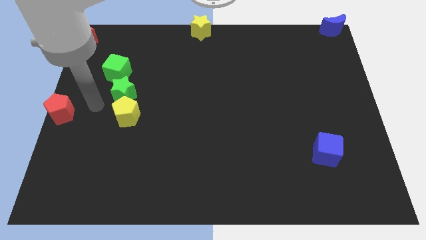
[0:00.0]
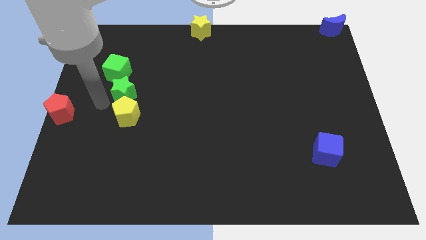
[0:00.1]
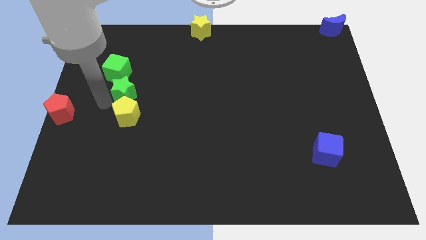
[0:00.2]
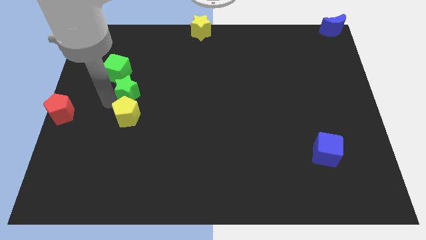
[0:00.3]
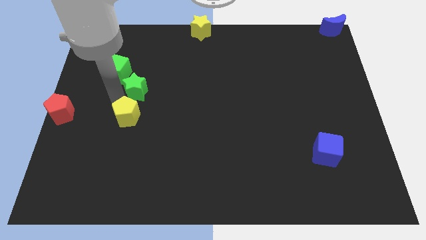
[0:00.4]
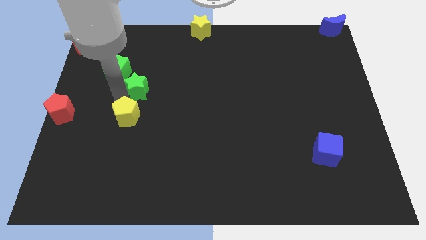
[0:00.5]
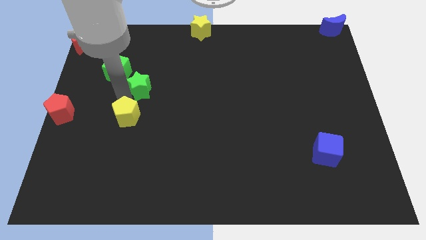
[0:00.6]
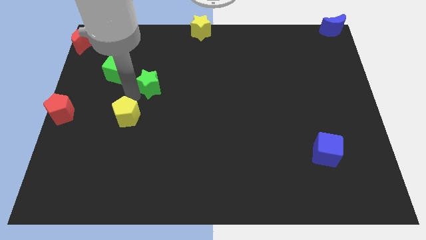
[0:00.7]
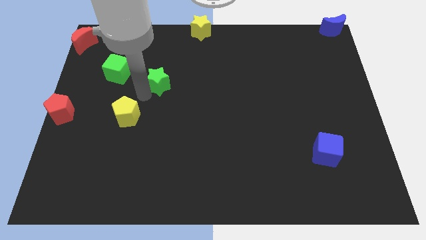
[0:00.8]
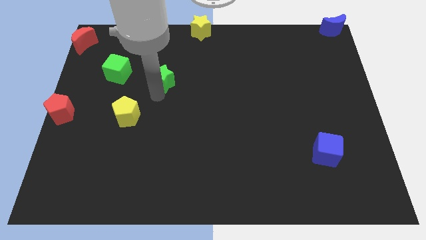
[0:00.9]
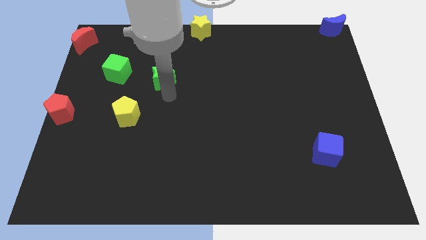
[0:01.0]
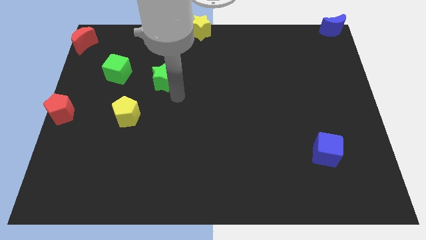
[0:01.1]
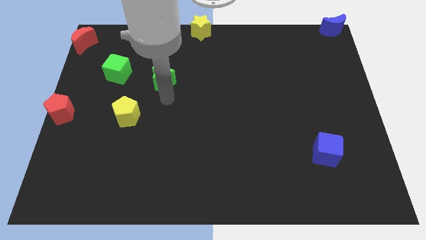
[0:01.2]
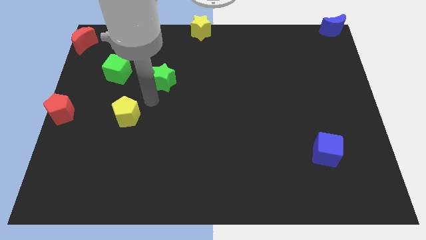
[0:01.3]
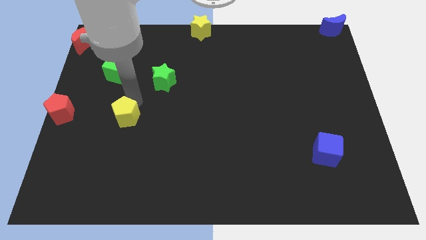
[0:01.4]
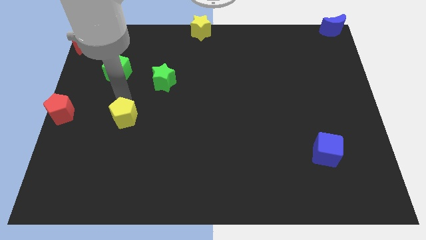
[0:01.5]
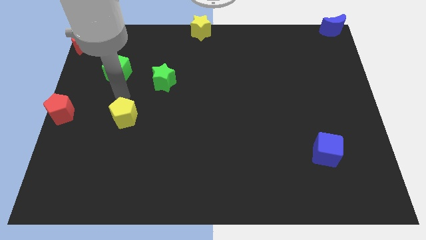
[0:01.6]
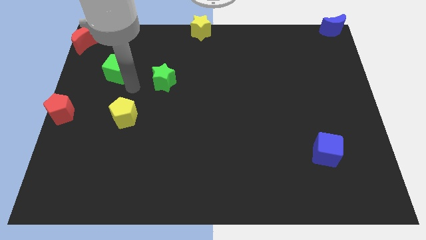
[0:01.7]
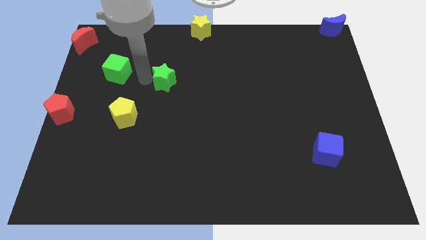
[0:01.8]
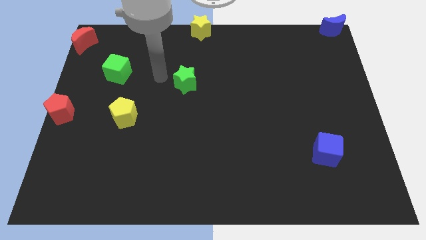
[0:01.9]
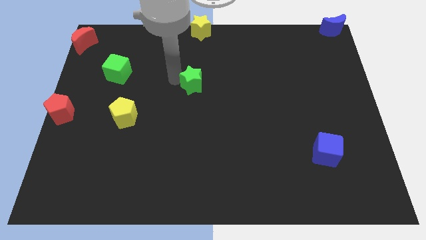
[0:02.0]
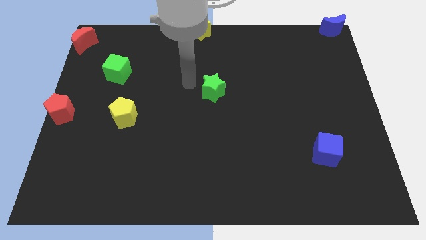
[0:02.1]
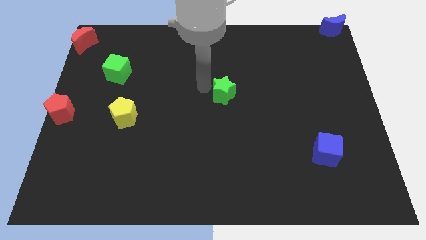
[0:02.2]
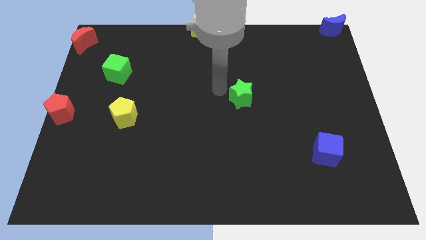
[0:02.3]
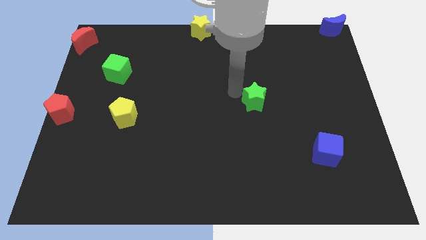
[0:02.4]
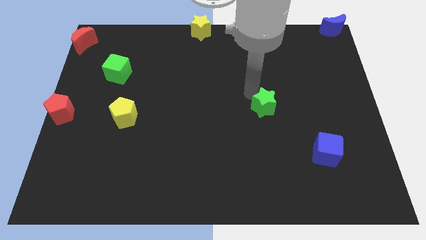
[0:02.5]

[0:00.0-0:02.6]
separate green star and yellow pentagon

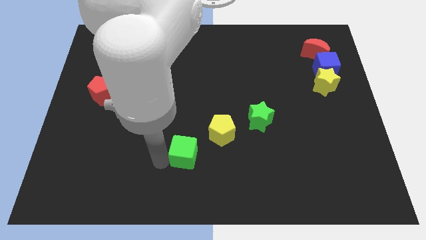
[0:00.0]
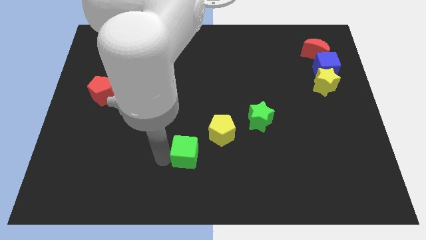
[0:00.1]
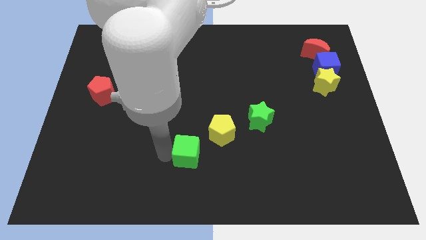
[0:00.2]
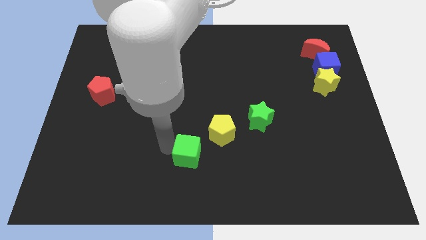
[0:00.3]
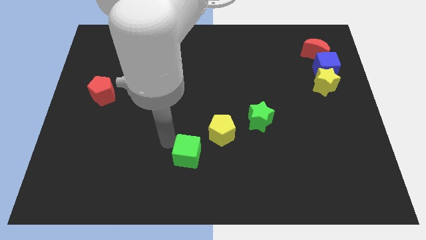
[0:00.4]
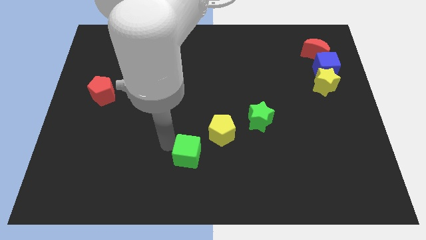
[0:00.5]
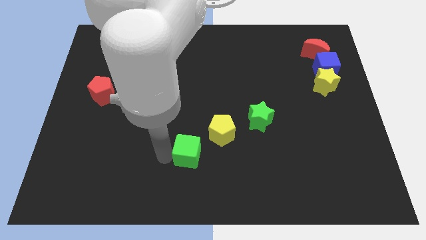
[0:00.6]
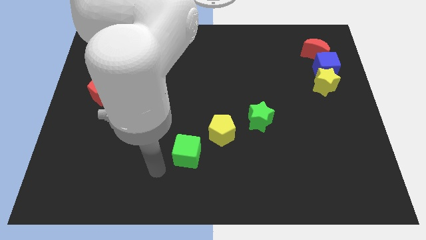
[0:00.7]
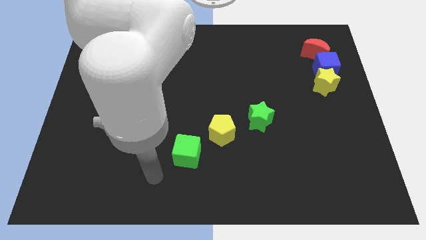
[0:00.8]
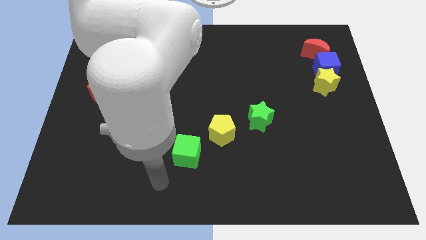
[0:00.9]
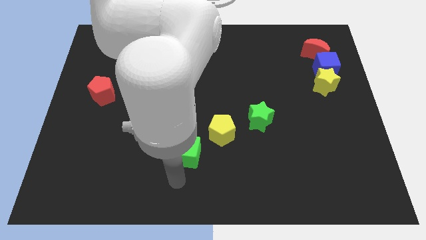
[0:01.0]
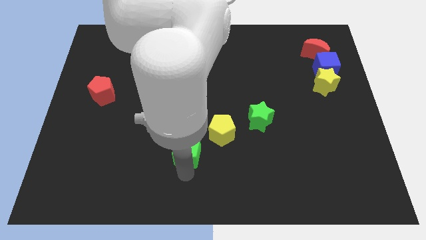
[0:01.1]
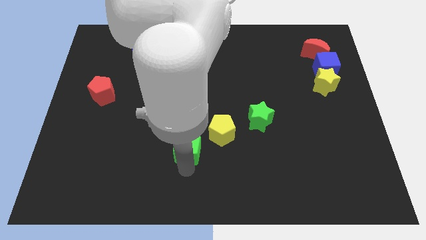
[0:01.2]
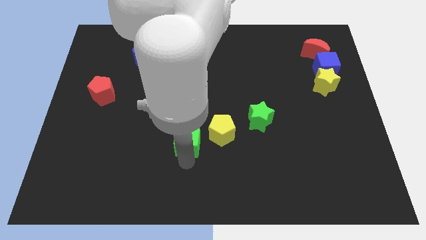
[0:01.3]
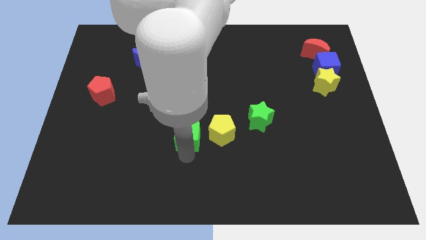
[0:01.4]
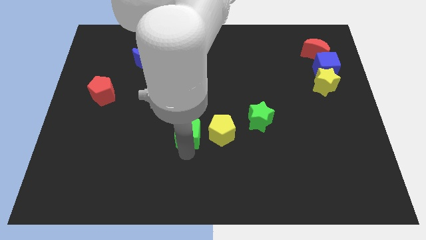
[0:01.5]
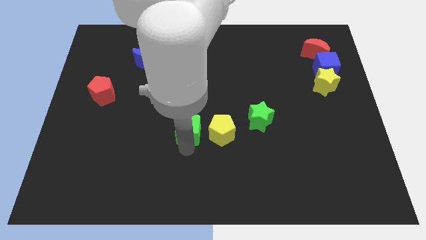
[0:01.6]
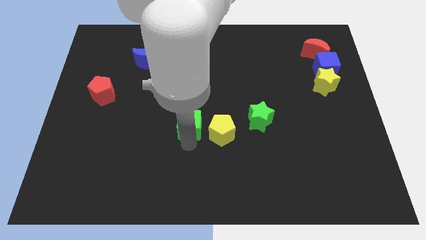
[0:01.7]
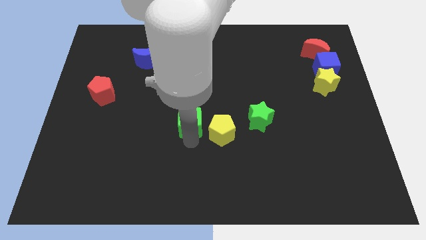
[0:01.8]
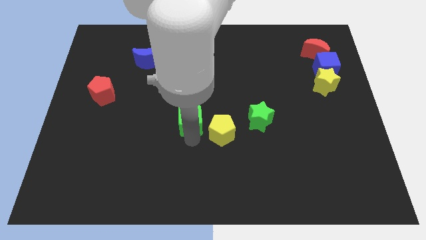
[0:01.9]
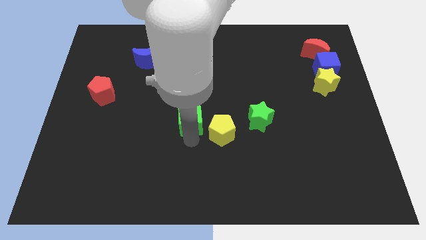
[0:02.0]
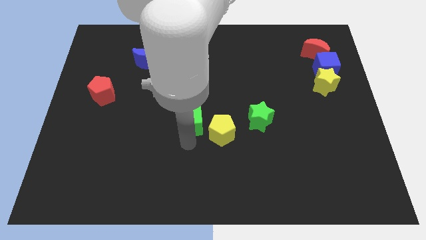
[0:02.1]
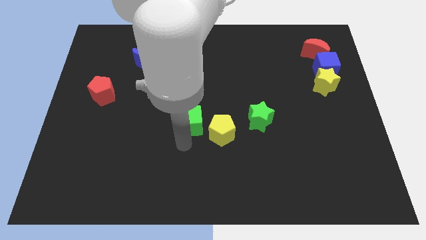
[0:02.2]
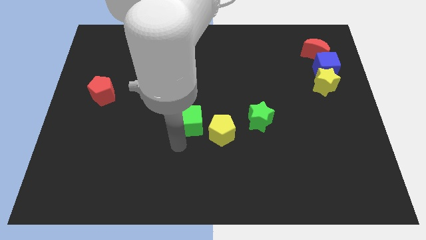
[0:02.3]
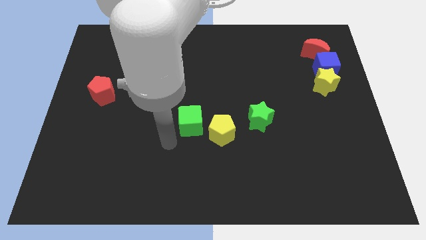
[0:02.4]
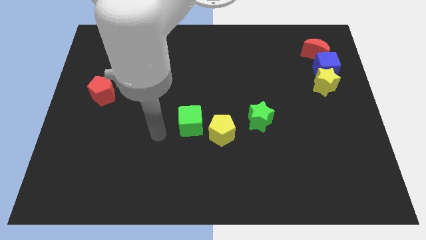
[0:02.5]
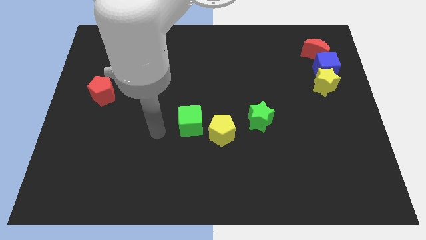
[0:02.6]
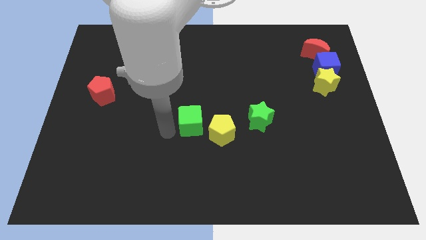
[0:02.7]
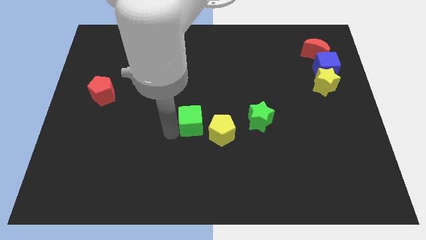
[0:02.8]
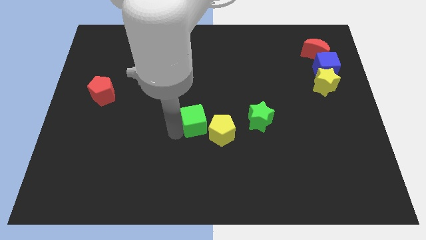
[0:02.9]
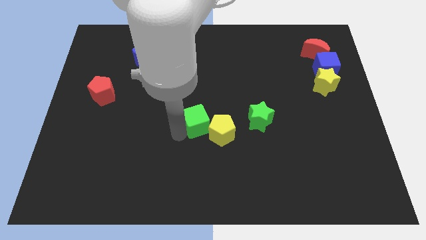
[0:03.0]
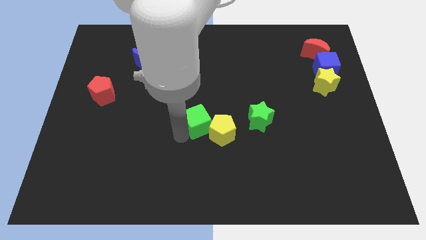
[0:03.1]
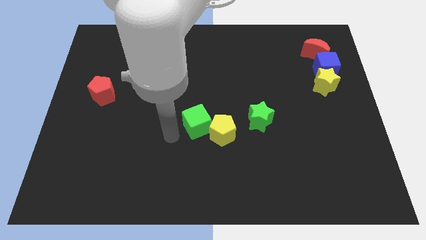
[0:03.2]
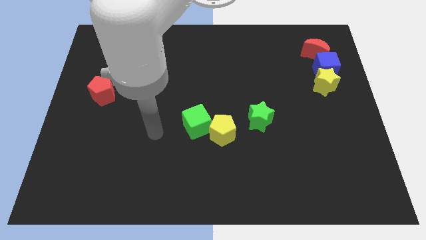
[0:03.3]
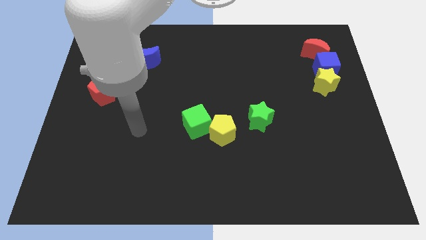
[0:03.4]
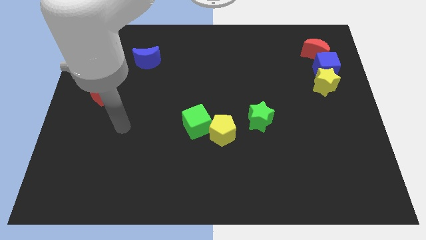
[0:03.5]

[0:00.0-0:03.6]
move green cube close to yellow pentagon

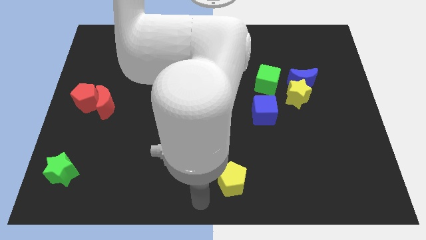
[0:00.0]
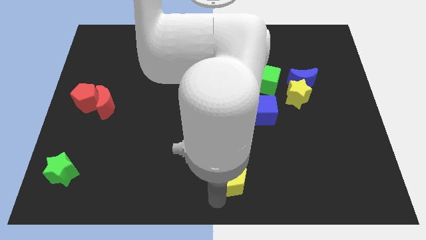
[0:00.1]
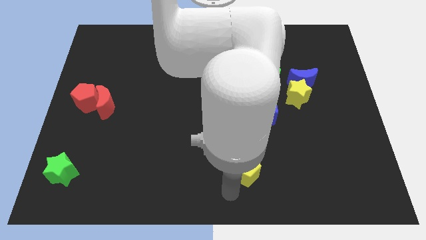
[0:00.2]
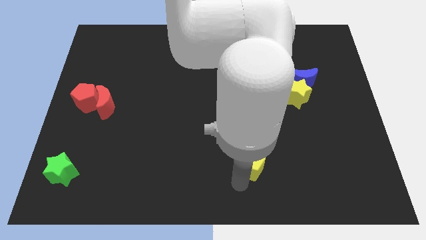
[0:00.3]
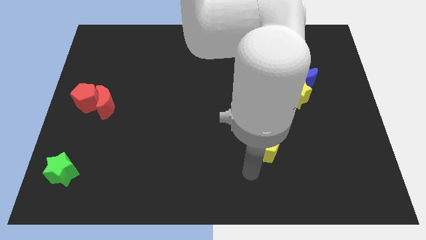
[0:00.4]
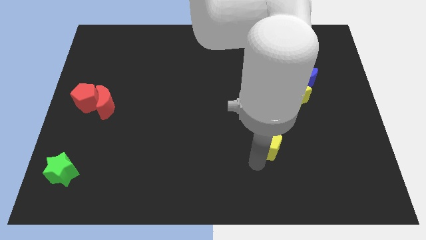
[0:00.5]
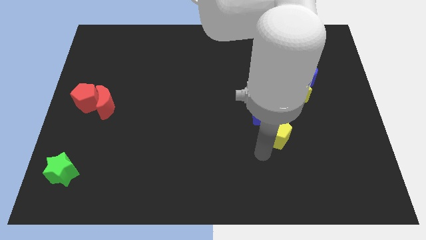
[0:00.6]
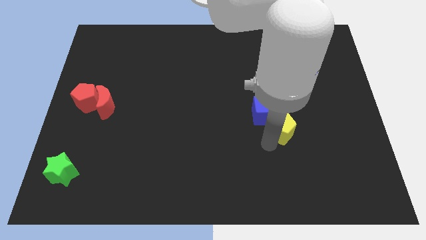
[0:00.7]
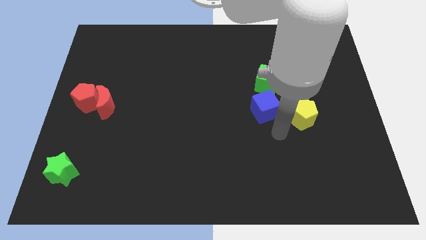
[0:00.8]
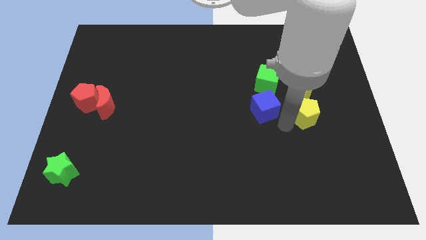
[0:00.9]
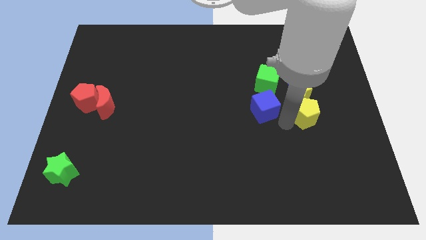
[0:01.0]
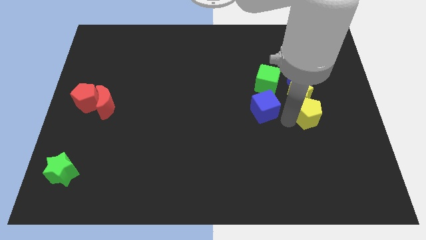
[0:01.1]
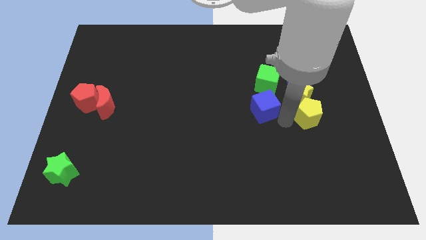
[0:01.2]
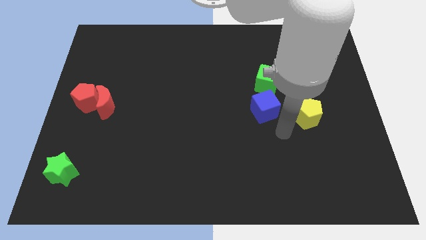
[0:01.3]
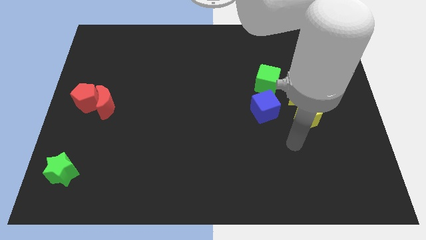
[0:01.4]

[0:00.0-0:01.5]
move the yellow pentagon to the right of the blue cube

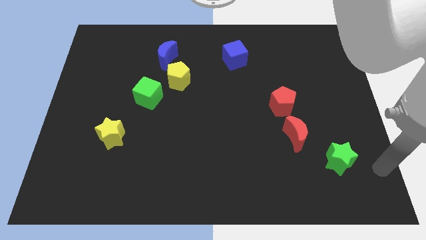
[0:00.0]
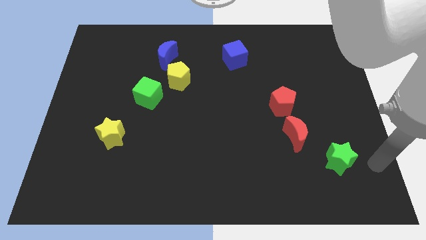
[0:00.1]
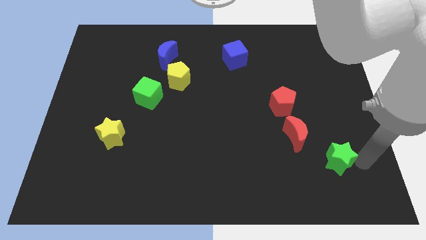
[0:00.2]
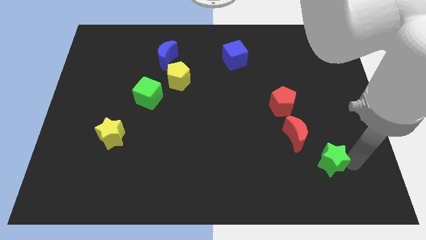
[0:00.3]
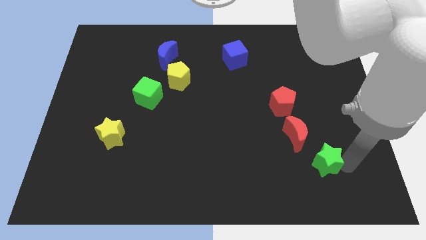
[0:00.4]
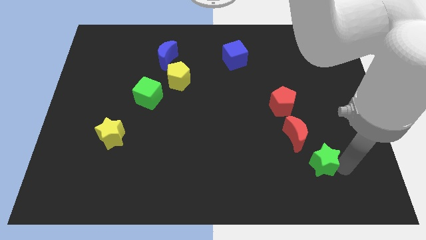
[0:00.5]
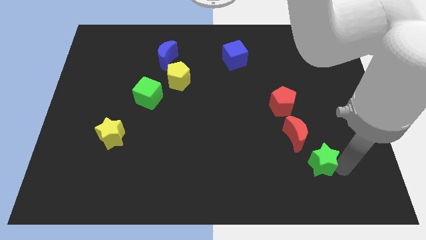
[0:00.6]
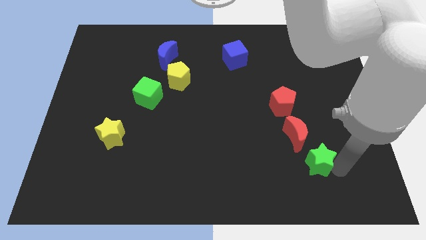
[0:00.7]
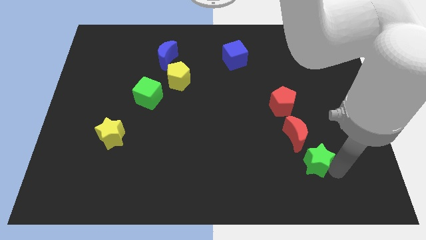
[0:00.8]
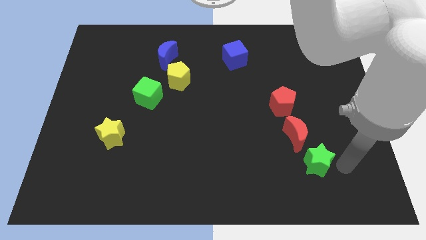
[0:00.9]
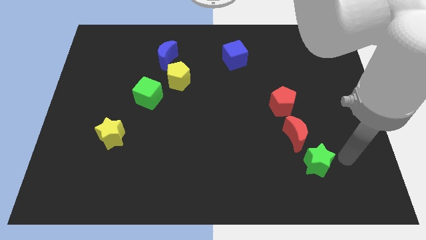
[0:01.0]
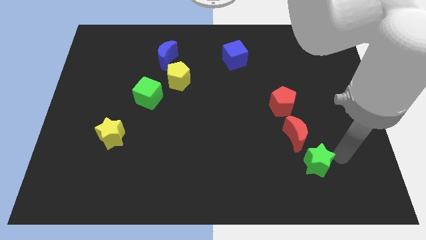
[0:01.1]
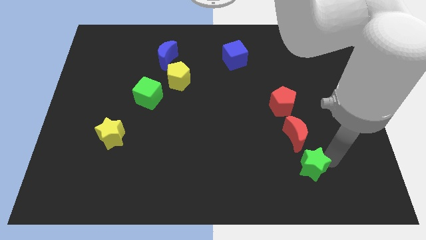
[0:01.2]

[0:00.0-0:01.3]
push the green star below the red crescent

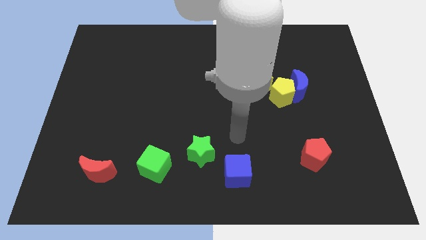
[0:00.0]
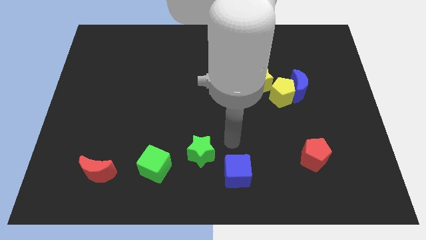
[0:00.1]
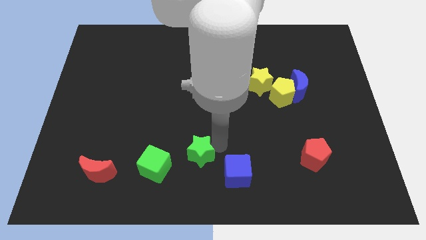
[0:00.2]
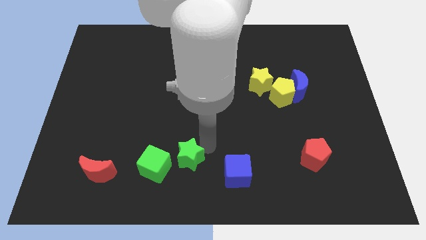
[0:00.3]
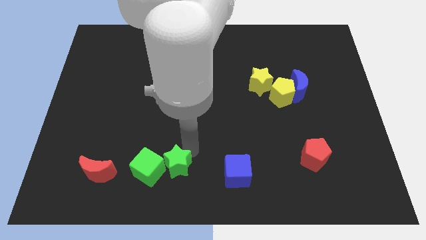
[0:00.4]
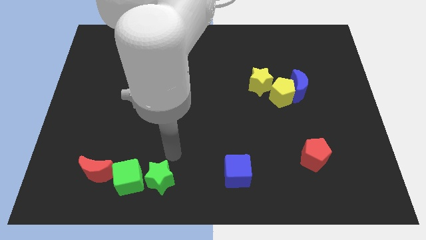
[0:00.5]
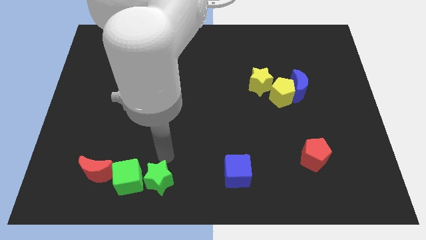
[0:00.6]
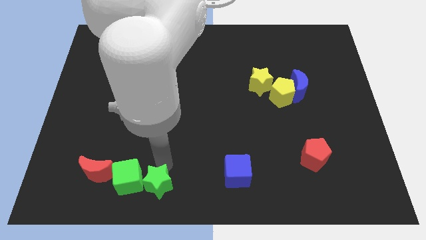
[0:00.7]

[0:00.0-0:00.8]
push the green star into green cube
